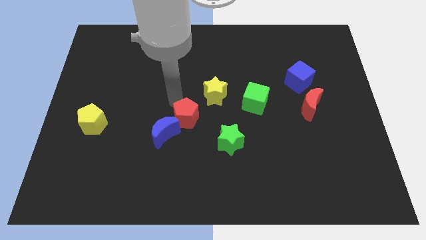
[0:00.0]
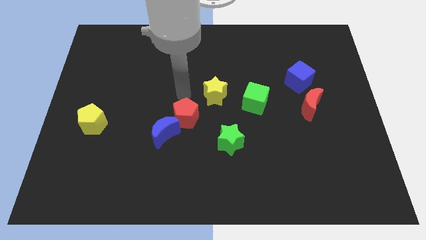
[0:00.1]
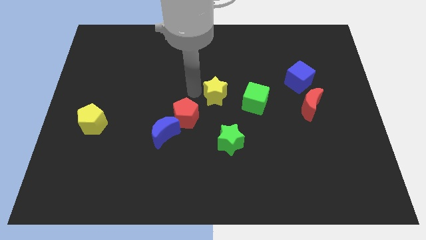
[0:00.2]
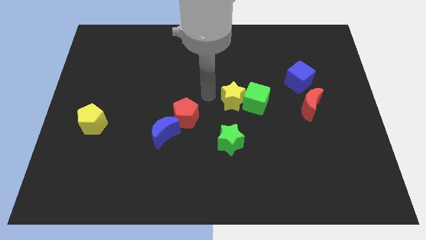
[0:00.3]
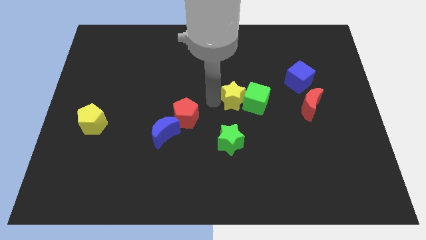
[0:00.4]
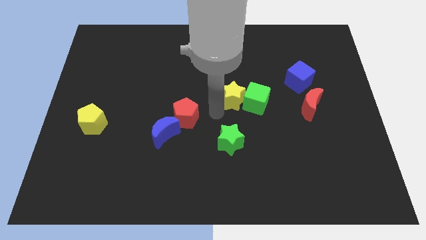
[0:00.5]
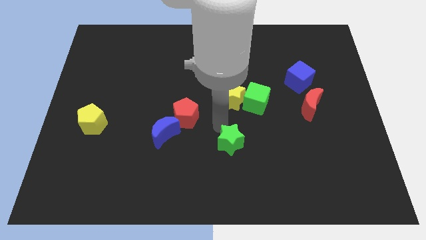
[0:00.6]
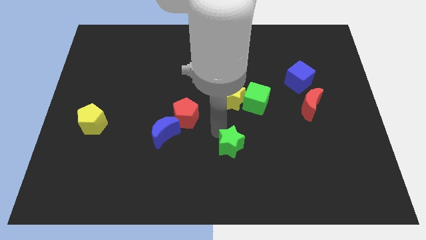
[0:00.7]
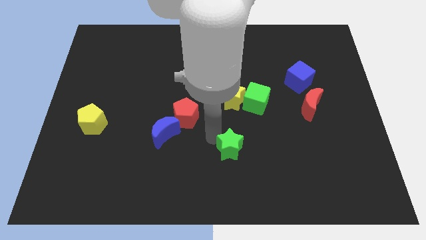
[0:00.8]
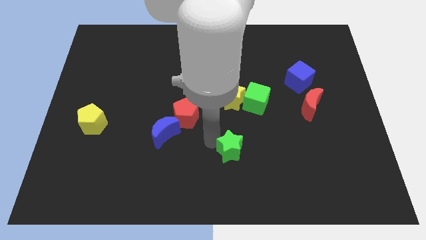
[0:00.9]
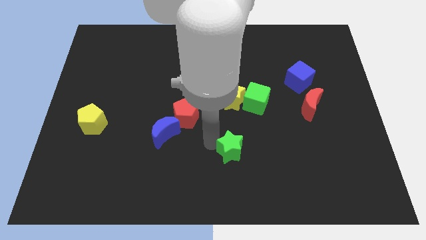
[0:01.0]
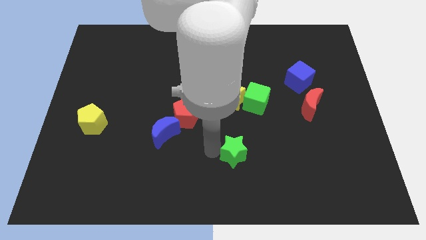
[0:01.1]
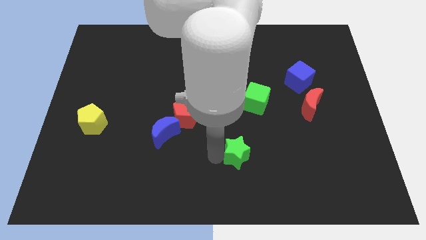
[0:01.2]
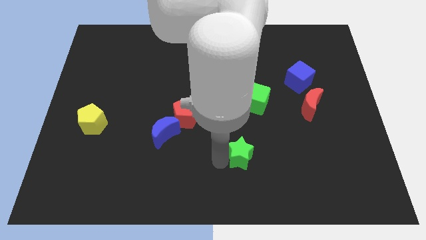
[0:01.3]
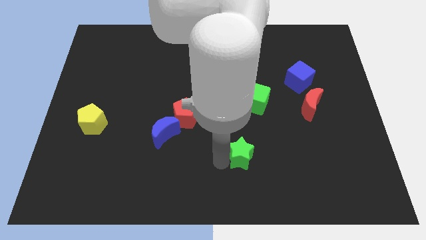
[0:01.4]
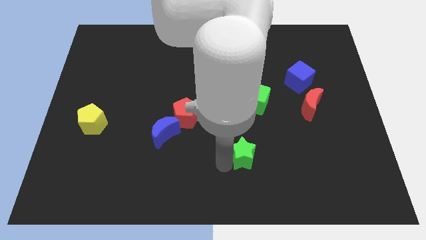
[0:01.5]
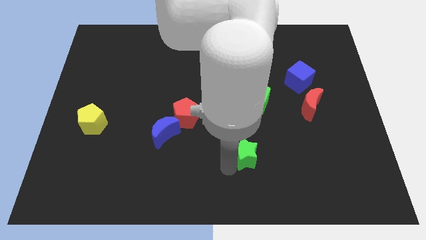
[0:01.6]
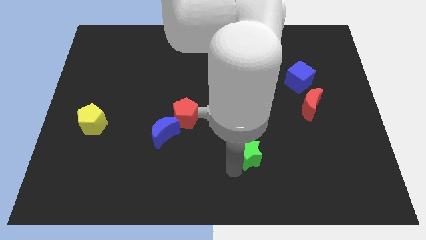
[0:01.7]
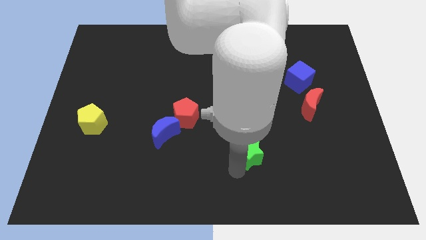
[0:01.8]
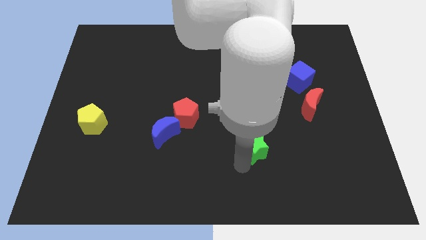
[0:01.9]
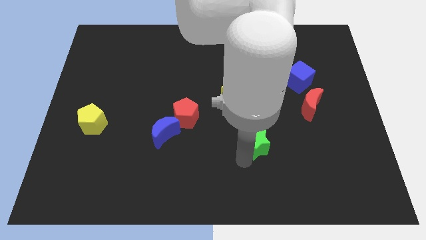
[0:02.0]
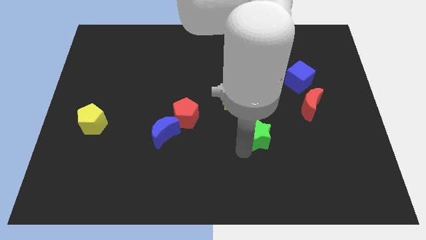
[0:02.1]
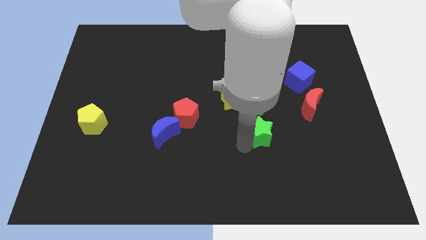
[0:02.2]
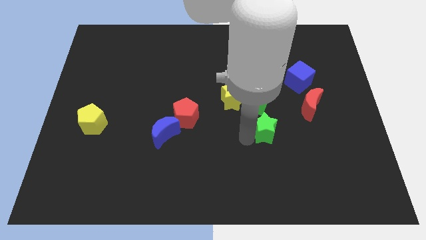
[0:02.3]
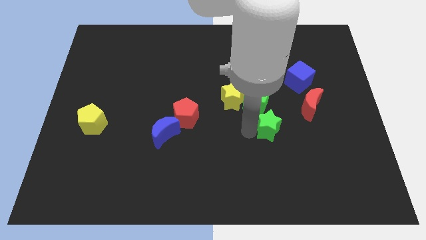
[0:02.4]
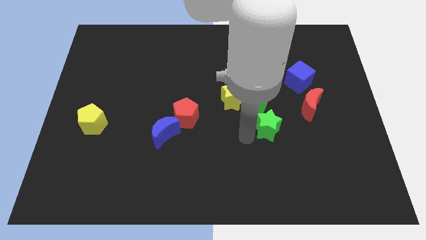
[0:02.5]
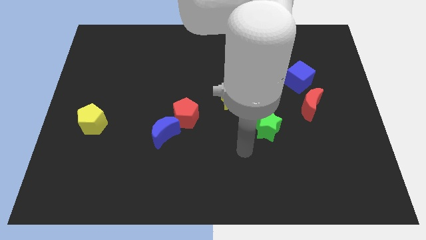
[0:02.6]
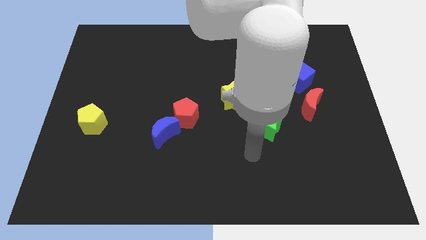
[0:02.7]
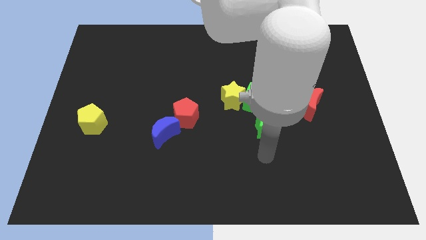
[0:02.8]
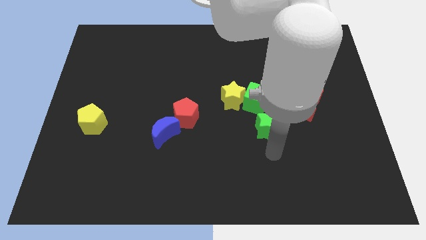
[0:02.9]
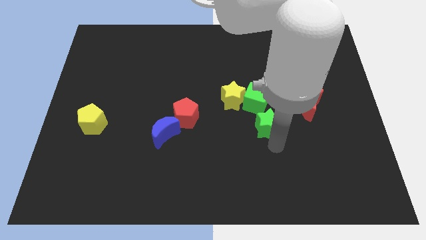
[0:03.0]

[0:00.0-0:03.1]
place the green star below the green cube

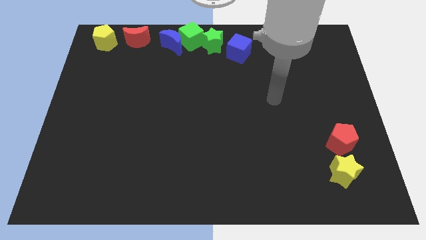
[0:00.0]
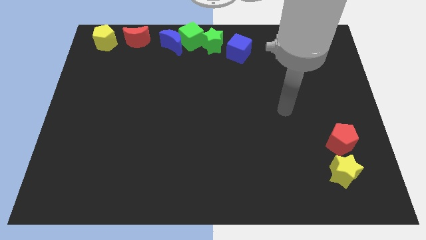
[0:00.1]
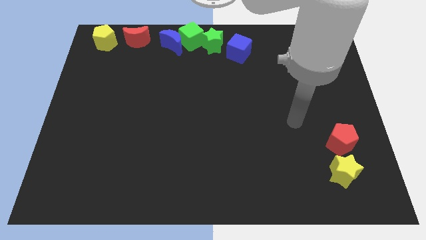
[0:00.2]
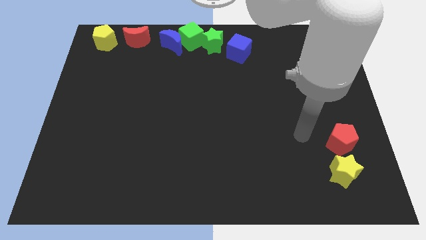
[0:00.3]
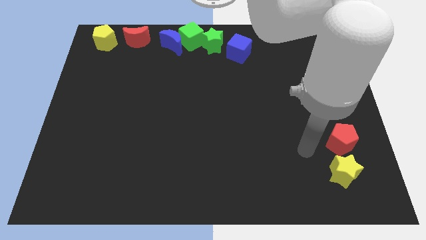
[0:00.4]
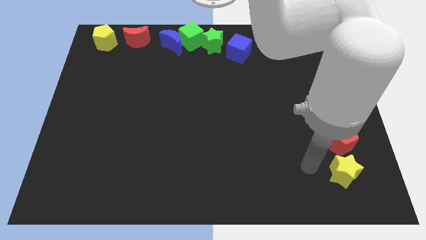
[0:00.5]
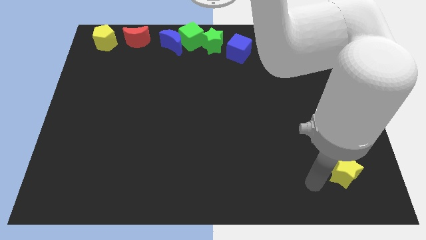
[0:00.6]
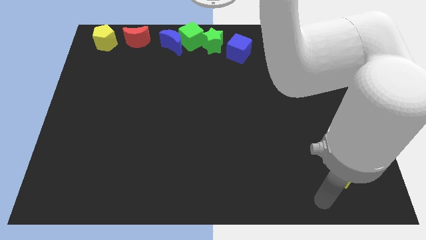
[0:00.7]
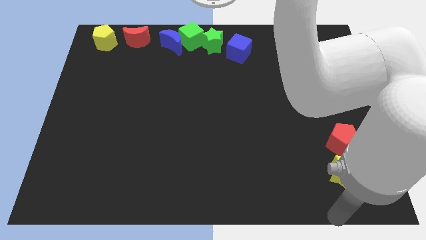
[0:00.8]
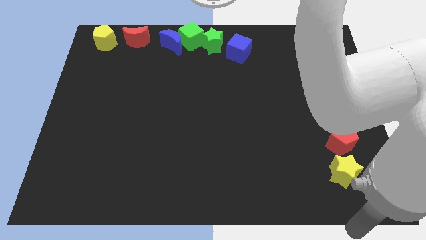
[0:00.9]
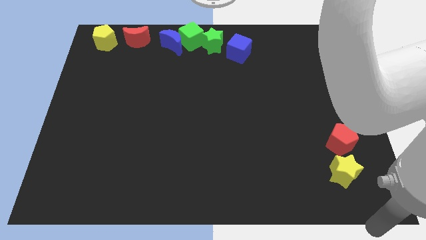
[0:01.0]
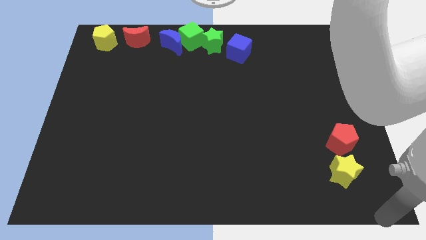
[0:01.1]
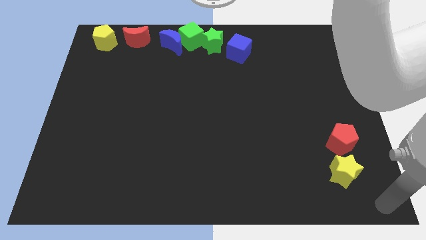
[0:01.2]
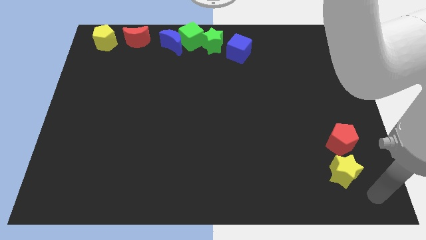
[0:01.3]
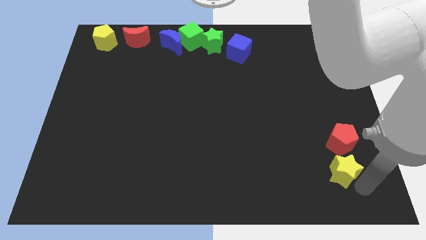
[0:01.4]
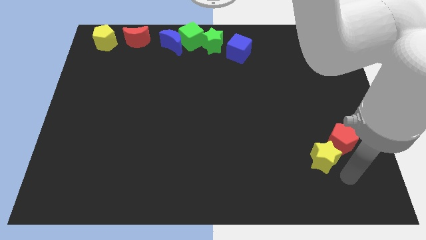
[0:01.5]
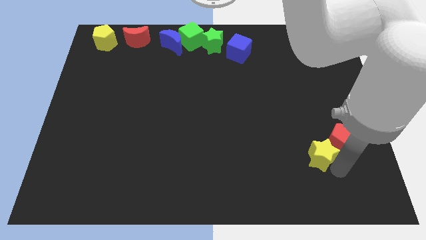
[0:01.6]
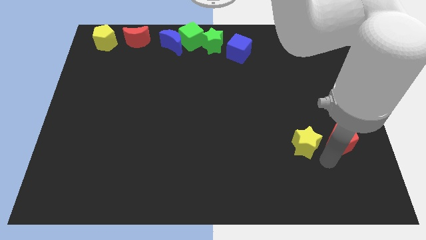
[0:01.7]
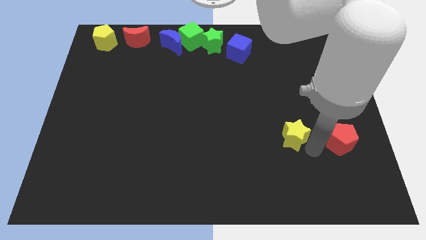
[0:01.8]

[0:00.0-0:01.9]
put the yellow star left to the red pentagon

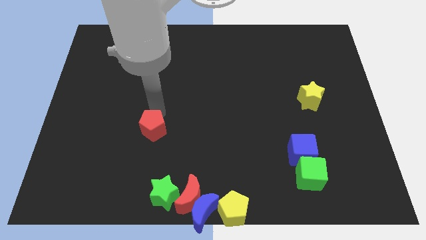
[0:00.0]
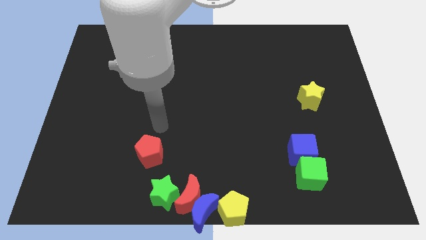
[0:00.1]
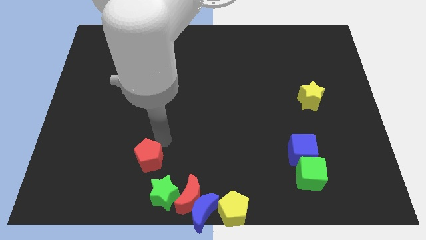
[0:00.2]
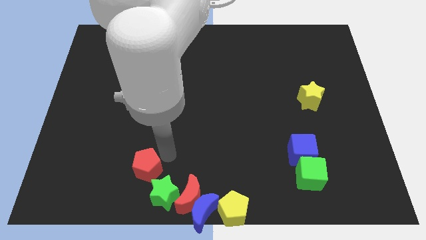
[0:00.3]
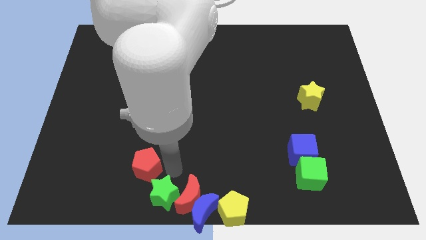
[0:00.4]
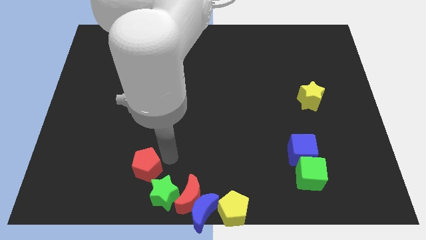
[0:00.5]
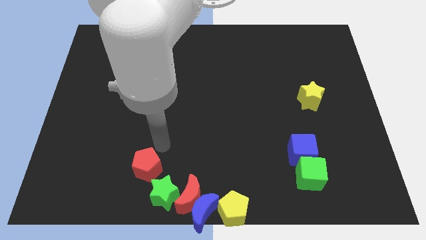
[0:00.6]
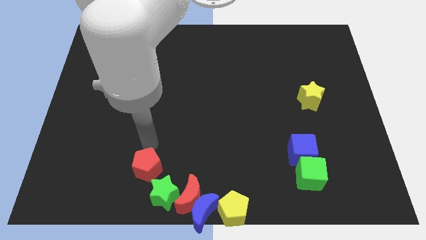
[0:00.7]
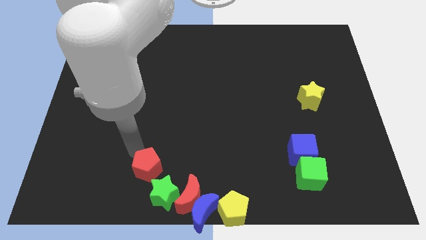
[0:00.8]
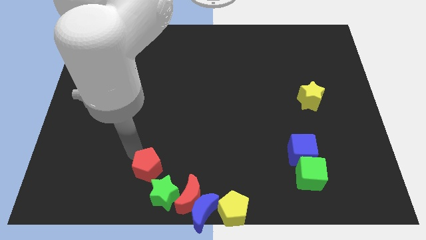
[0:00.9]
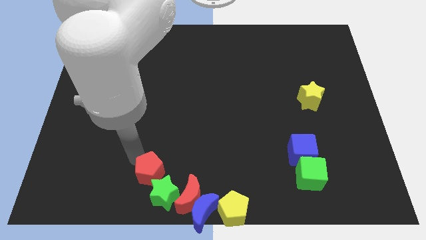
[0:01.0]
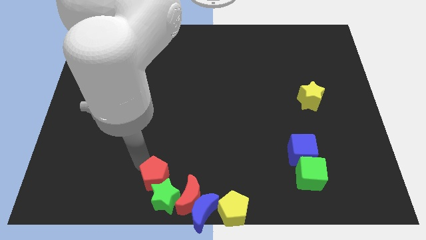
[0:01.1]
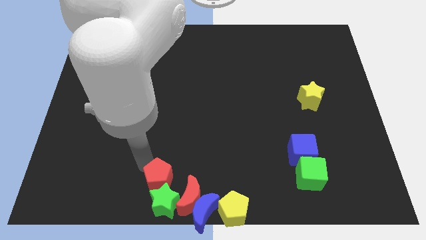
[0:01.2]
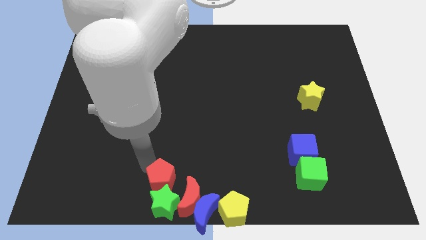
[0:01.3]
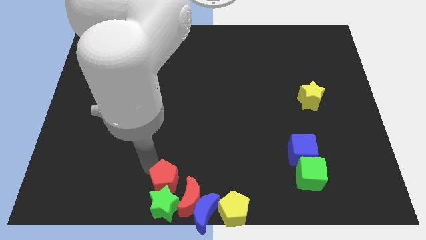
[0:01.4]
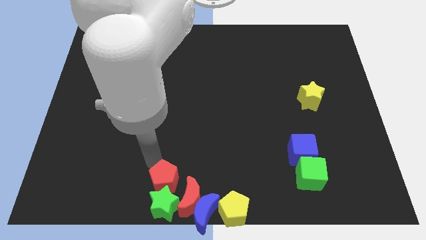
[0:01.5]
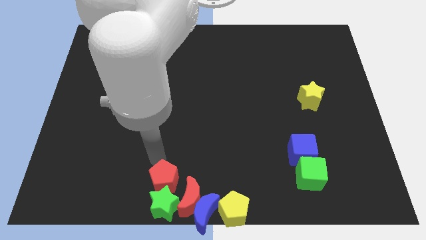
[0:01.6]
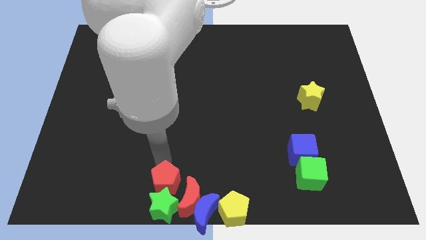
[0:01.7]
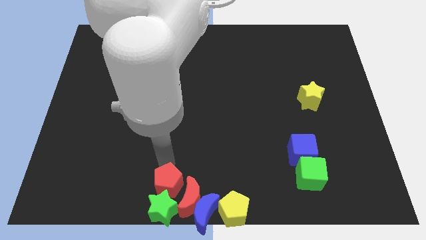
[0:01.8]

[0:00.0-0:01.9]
push the red pentagon towards the green star

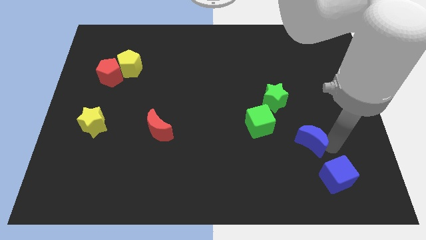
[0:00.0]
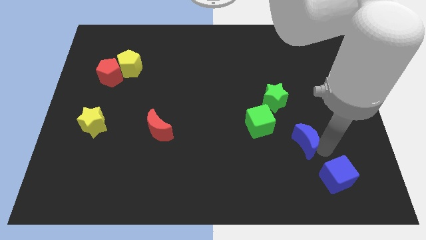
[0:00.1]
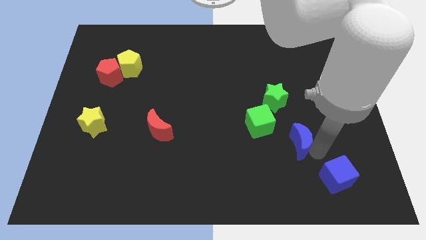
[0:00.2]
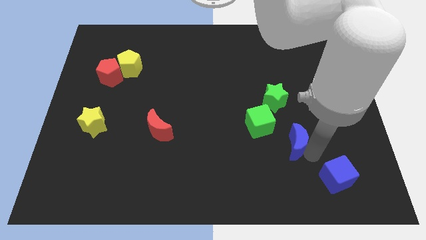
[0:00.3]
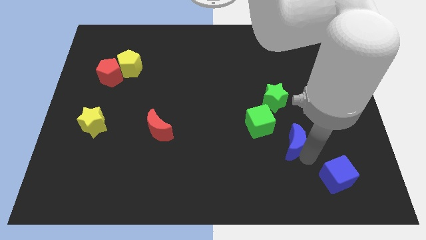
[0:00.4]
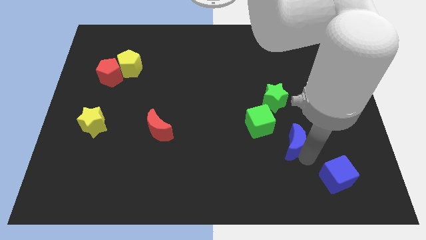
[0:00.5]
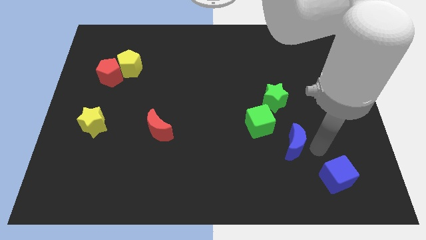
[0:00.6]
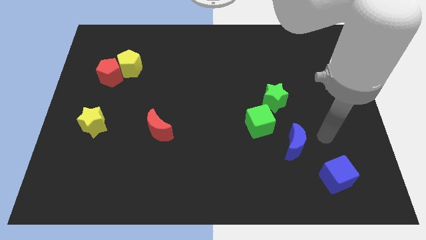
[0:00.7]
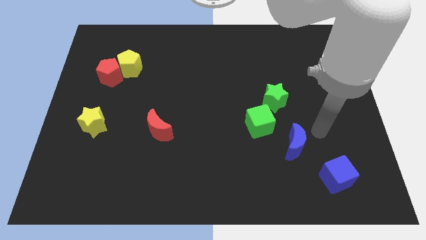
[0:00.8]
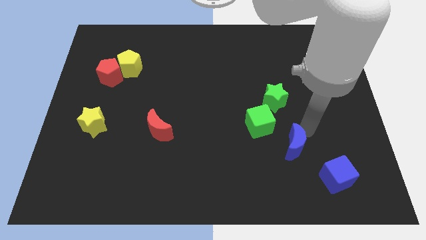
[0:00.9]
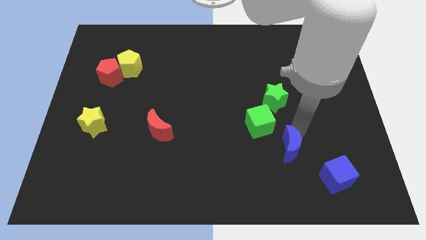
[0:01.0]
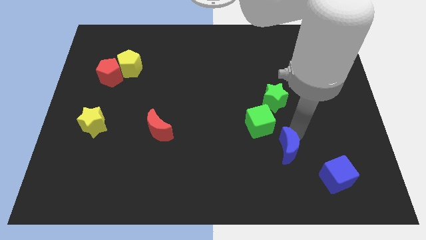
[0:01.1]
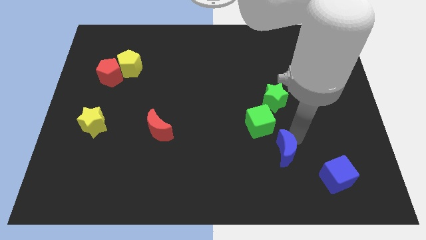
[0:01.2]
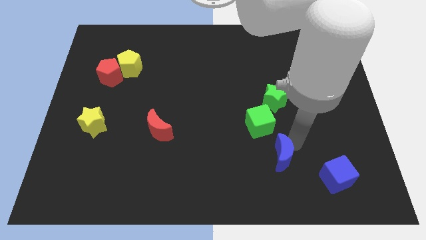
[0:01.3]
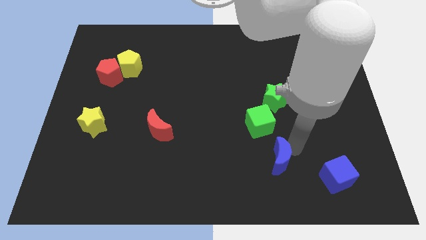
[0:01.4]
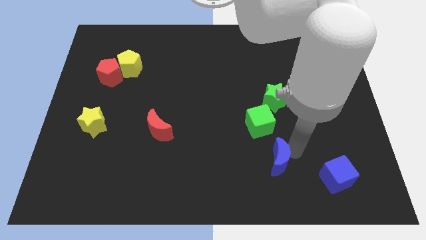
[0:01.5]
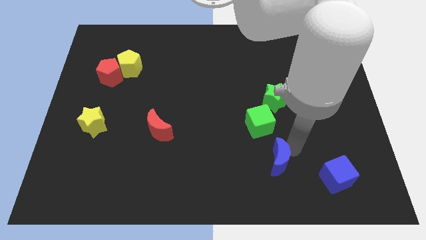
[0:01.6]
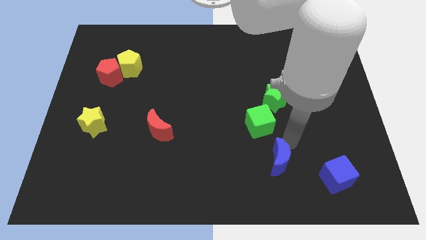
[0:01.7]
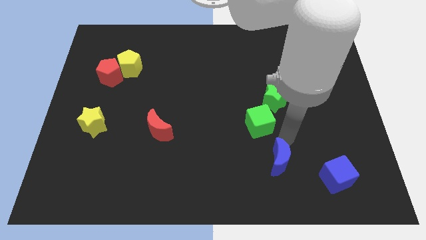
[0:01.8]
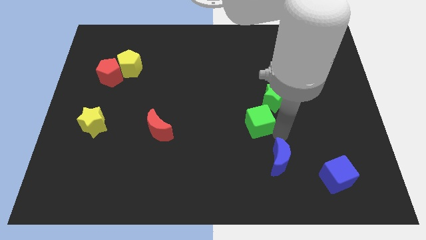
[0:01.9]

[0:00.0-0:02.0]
move the blue crescent to the bottom of the green cube

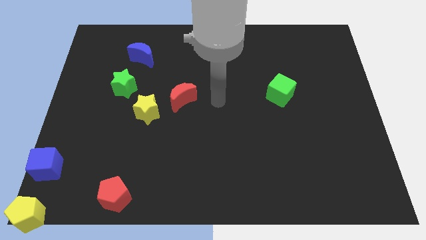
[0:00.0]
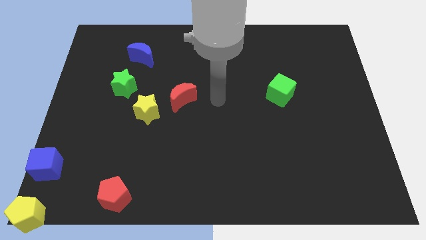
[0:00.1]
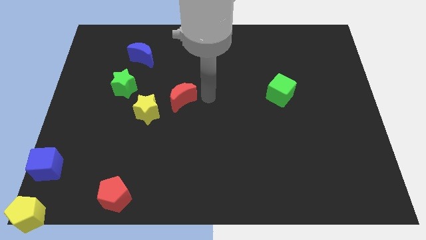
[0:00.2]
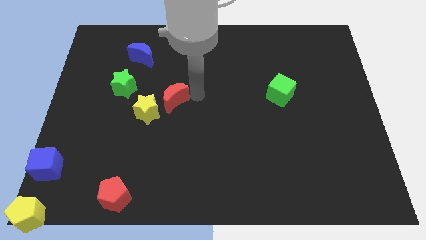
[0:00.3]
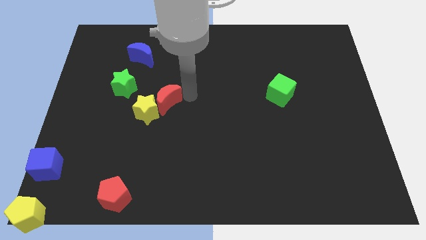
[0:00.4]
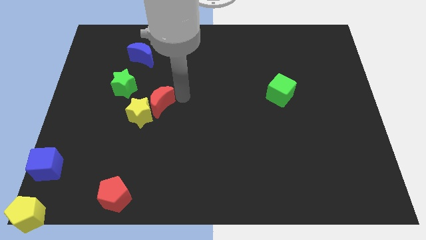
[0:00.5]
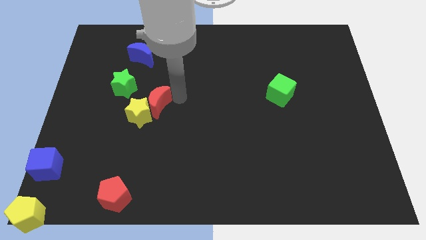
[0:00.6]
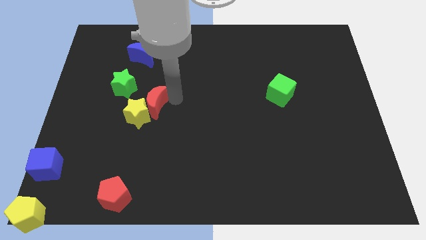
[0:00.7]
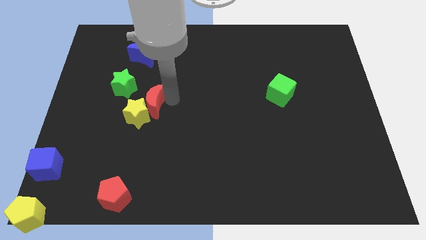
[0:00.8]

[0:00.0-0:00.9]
push red moon and yellow star slightly towards the left
